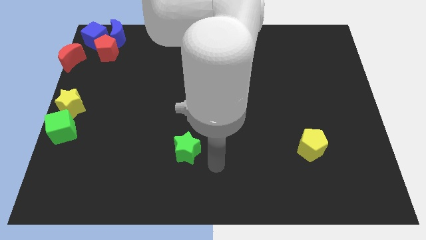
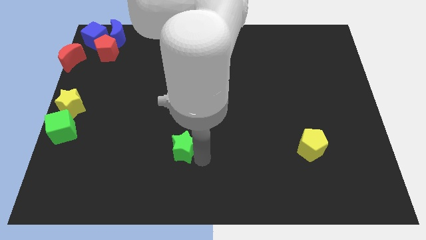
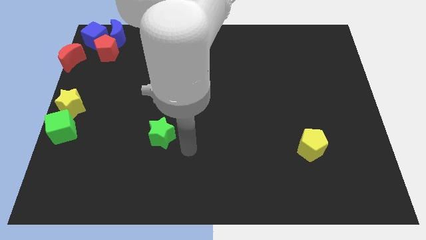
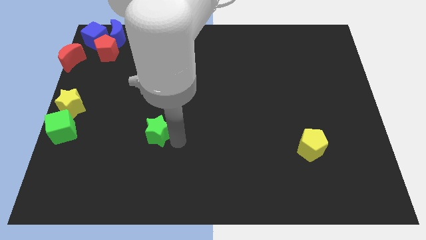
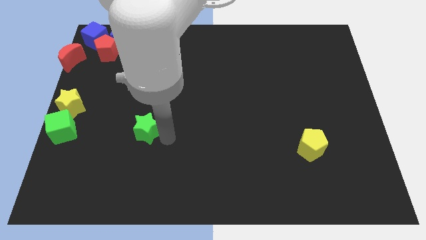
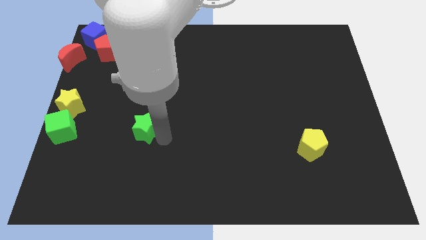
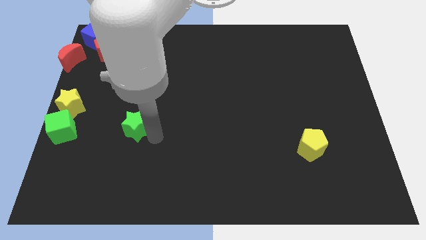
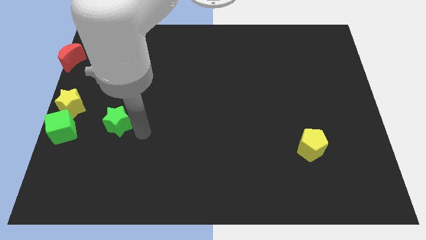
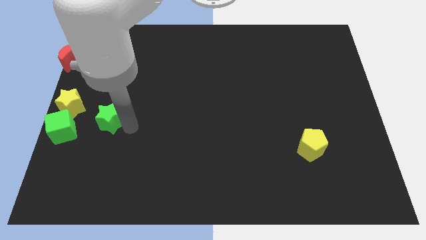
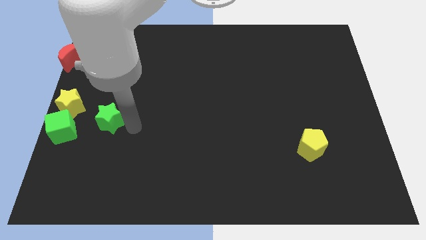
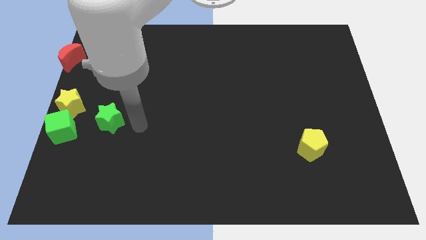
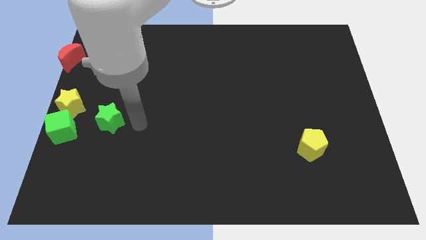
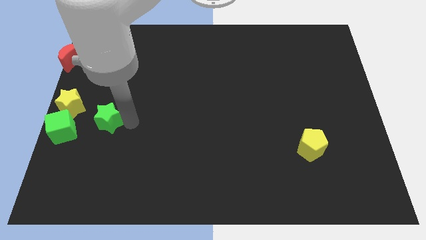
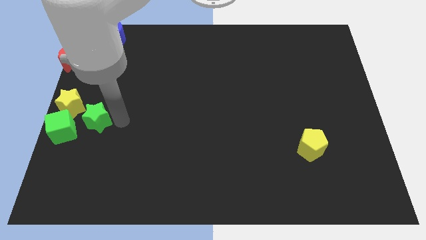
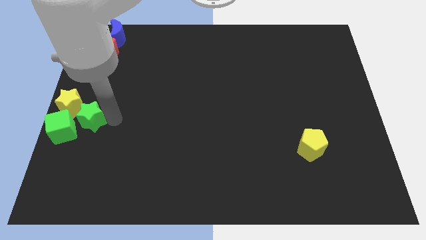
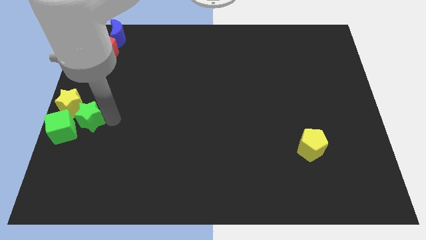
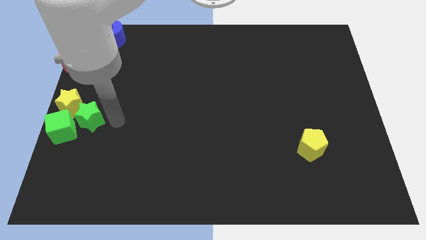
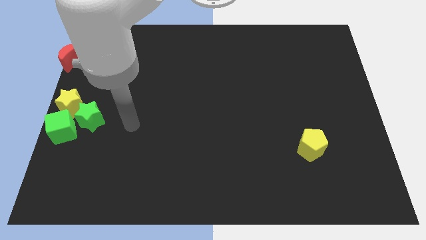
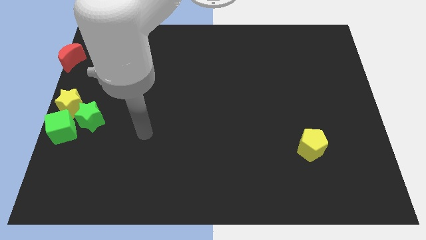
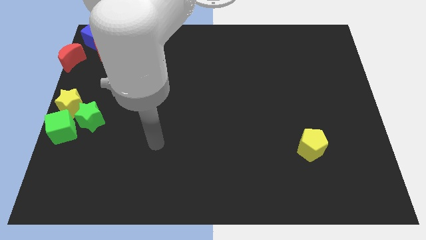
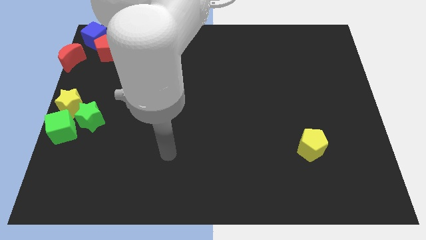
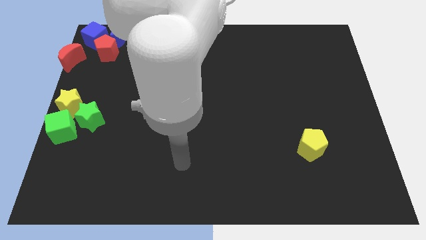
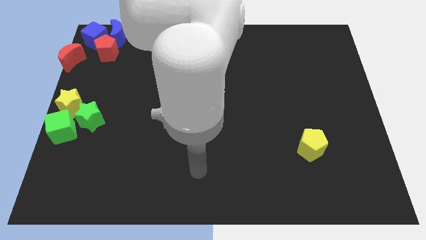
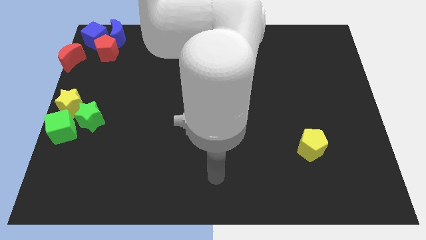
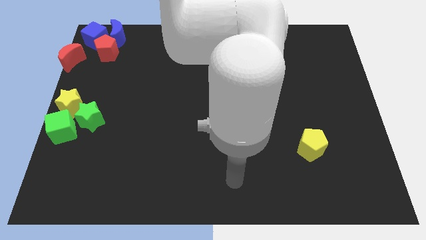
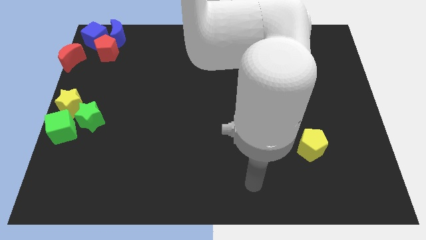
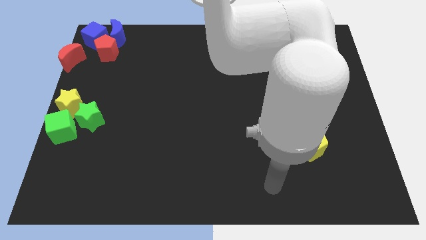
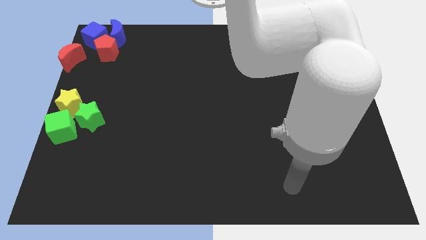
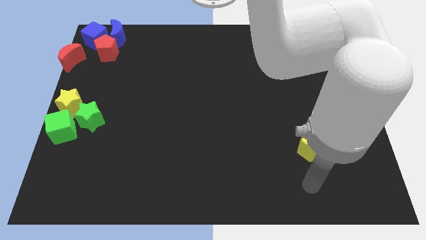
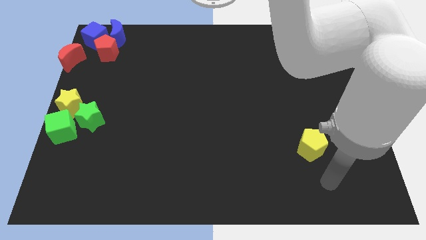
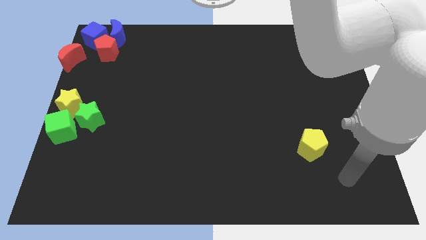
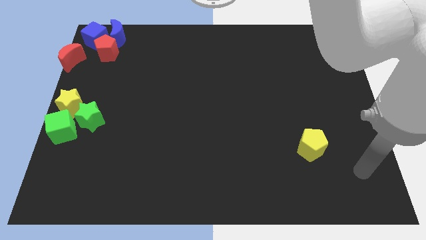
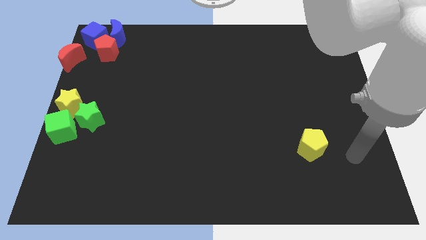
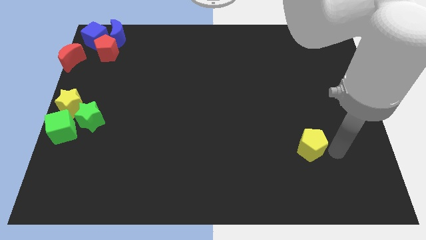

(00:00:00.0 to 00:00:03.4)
place your arm to the right side of the yellow pentagon

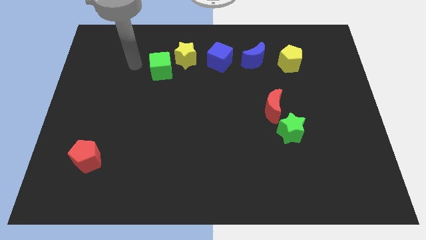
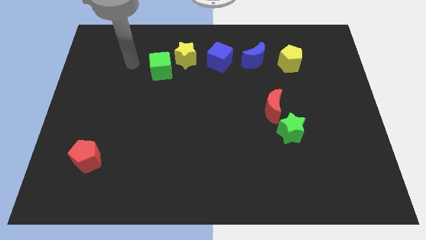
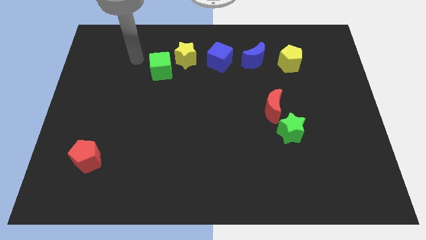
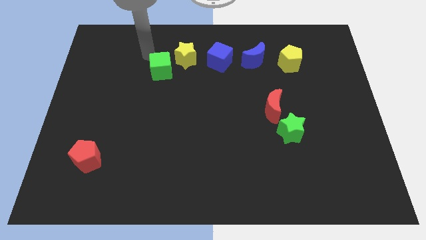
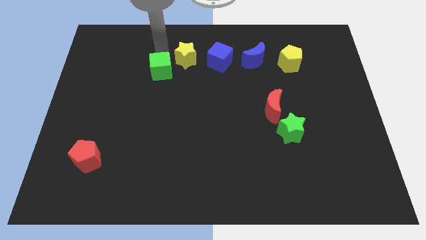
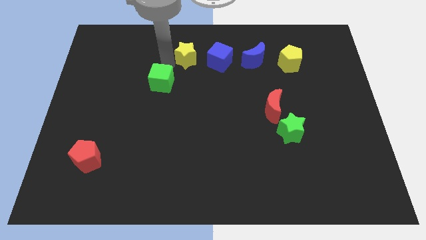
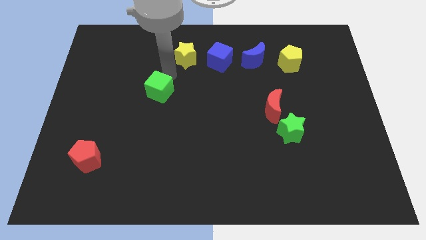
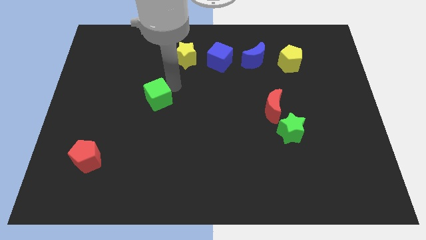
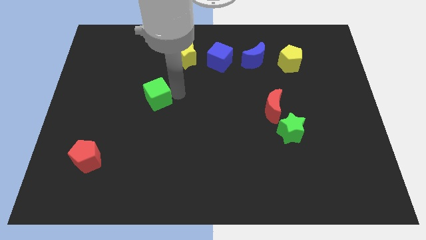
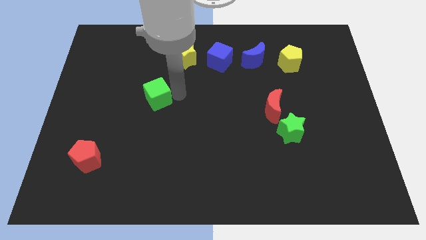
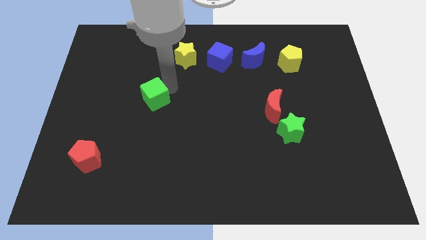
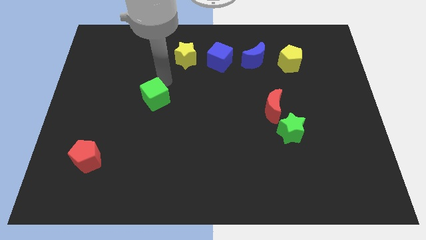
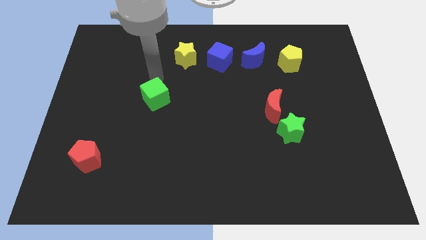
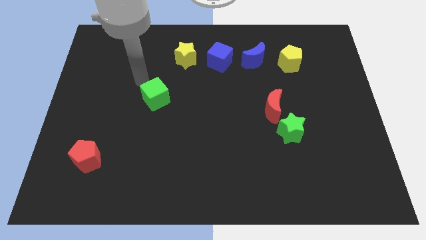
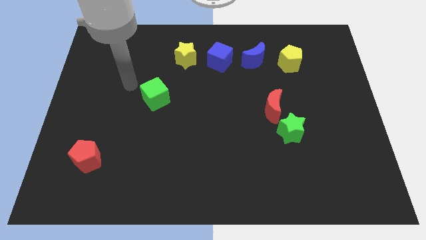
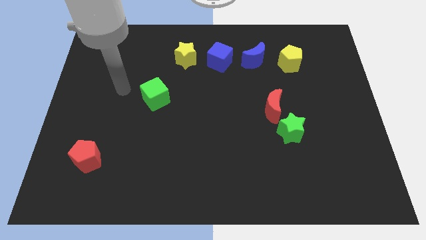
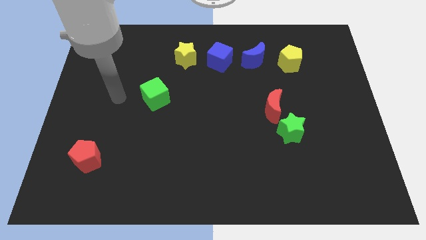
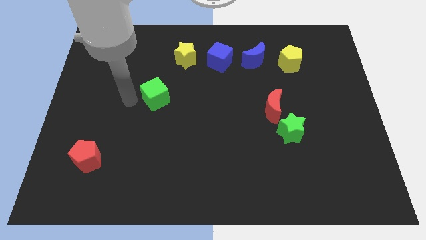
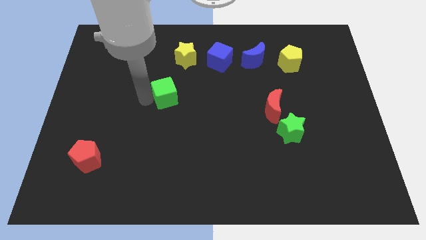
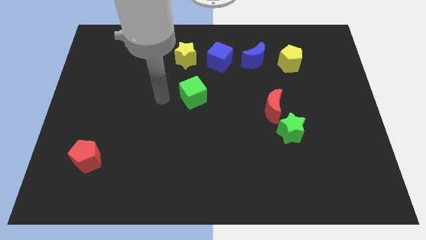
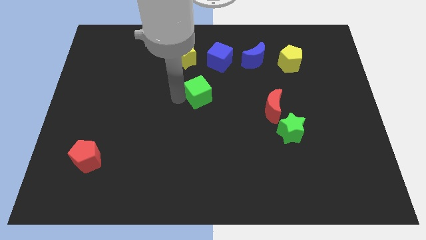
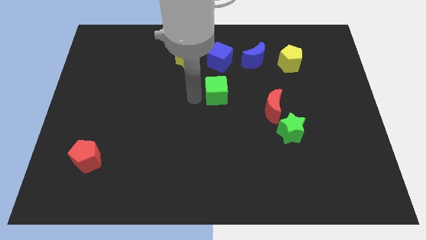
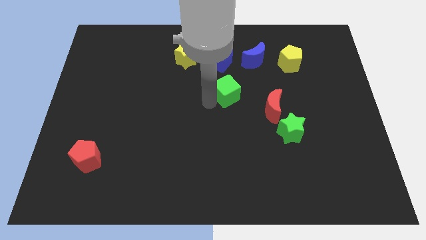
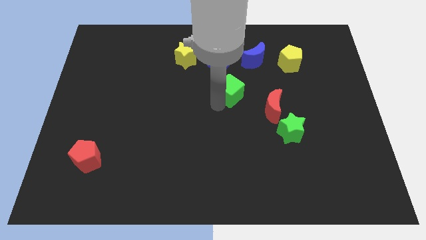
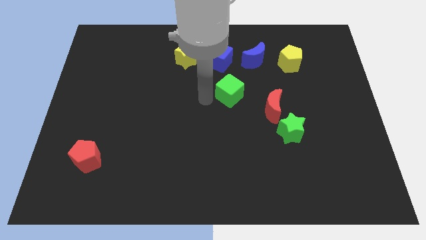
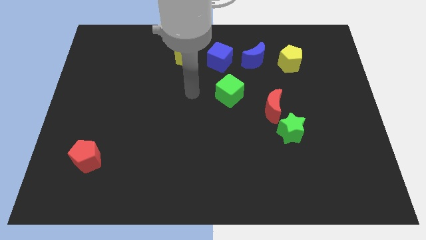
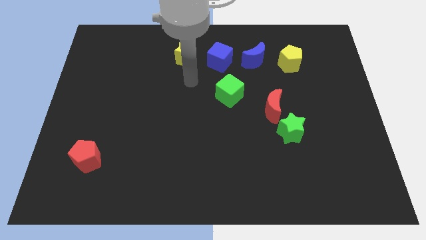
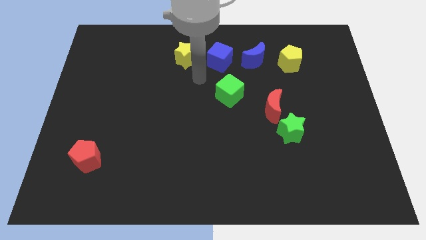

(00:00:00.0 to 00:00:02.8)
place the green cube below the blue cube

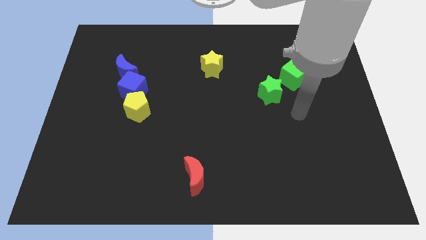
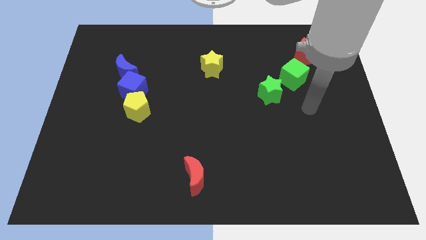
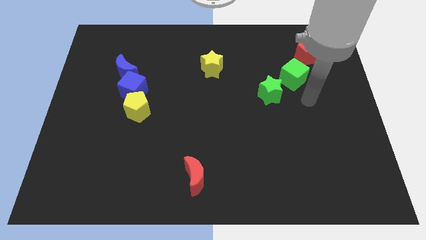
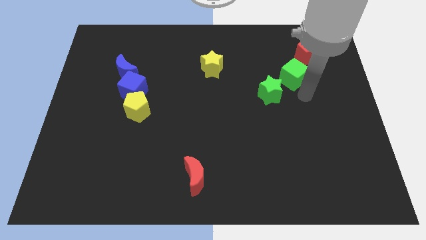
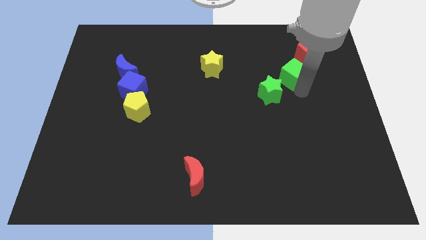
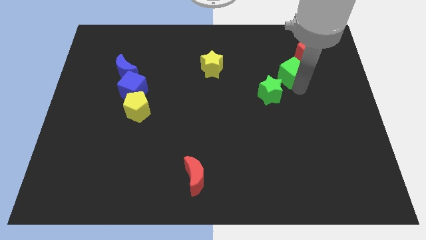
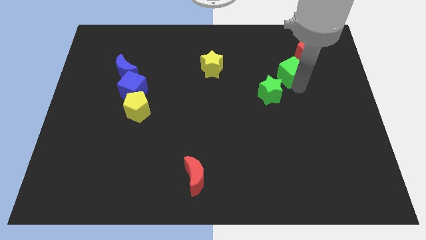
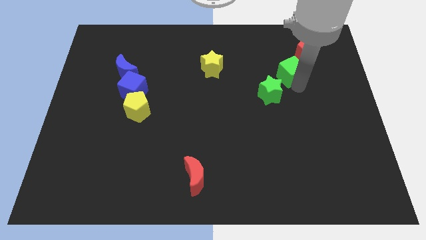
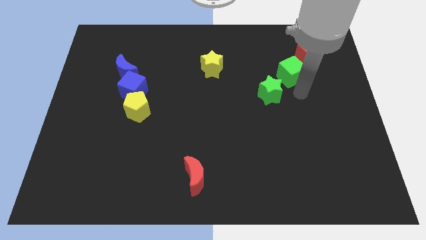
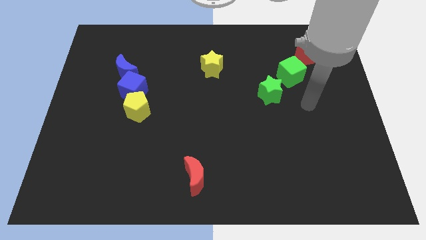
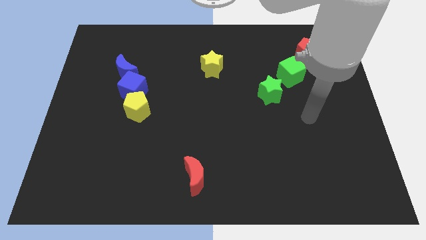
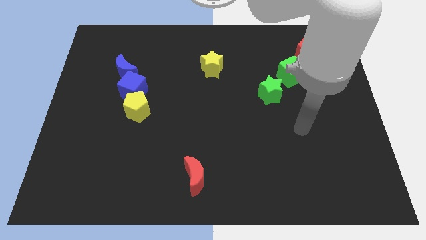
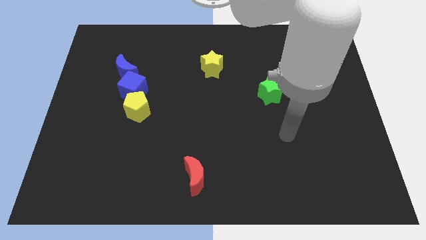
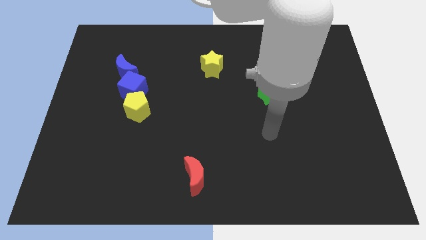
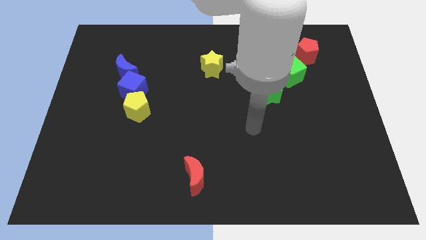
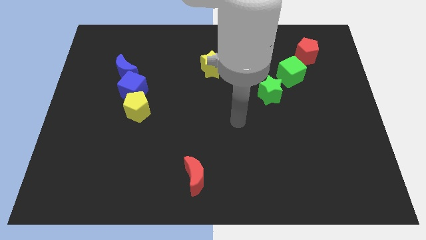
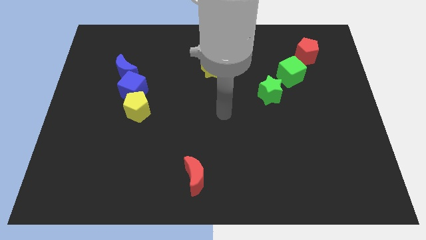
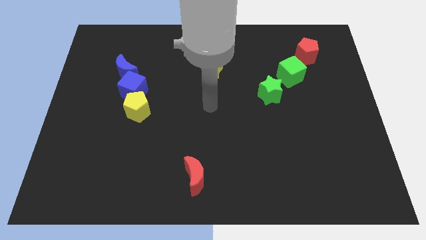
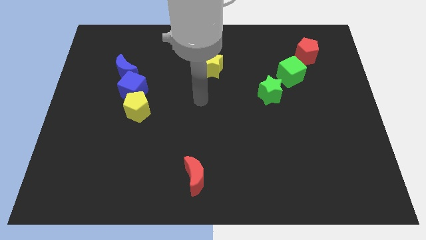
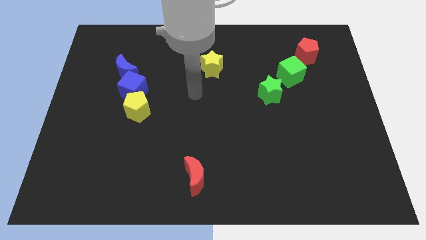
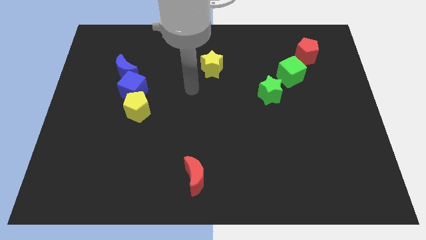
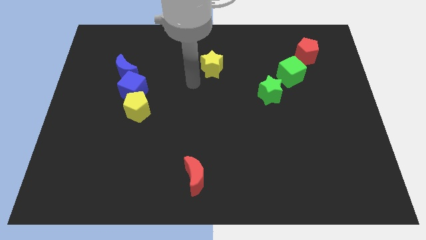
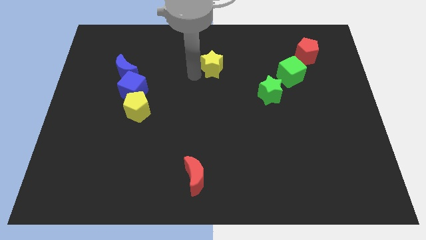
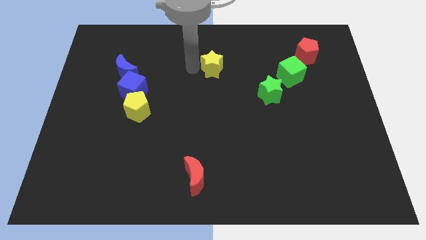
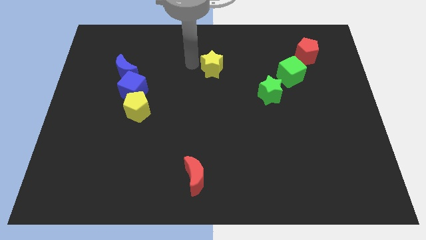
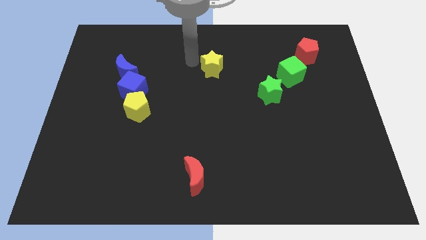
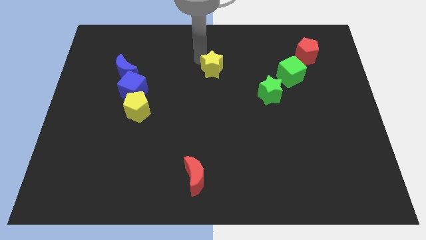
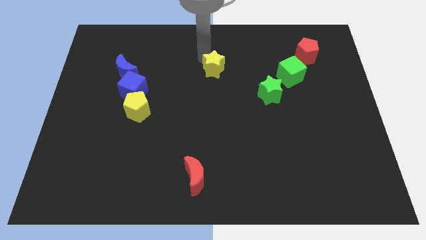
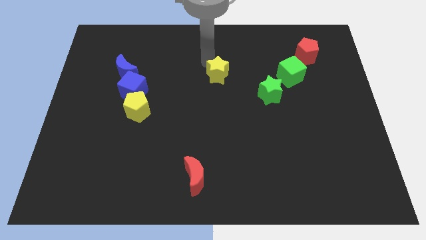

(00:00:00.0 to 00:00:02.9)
place your arm to the top left of yellow star
